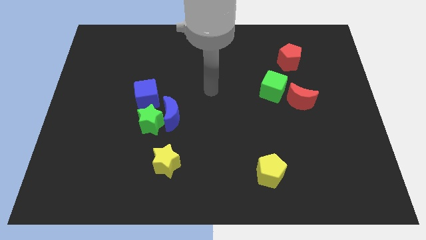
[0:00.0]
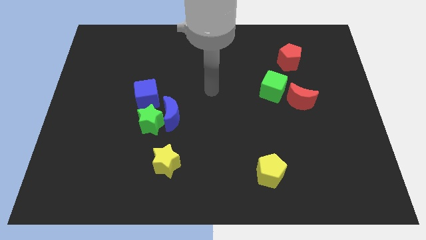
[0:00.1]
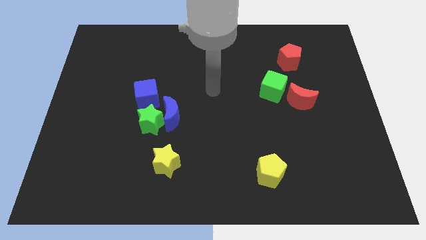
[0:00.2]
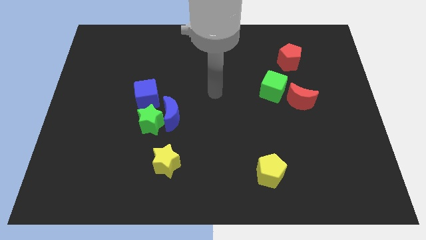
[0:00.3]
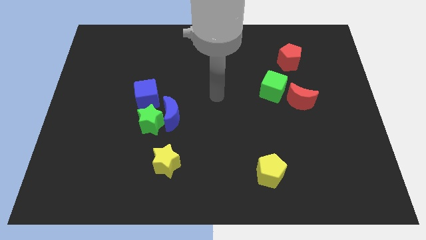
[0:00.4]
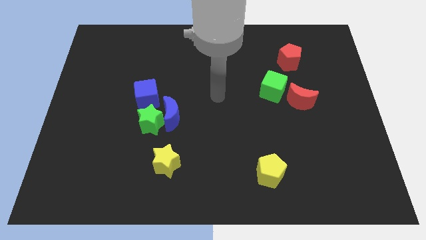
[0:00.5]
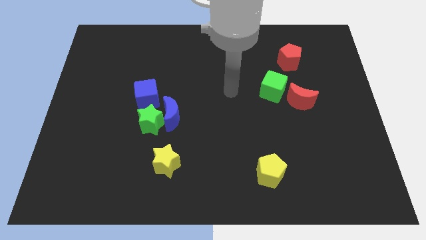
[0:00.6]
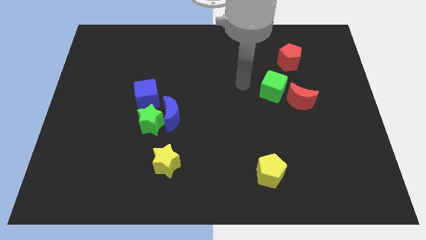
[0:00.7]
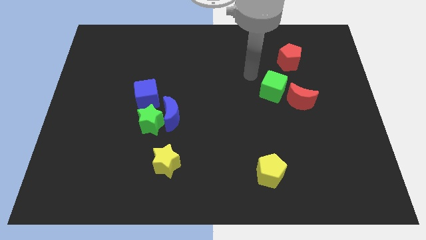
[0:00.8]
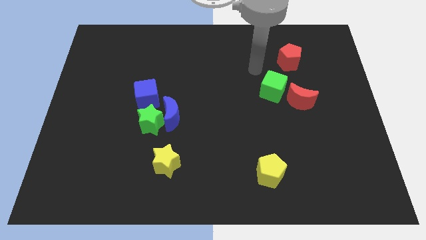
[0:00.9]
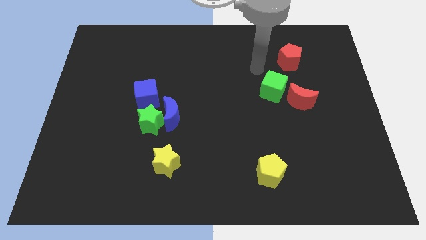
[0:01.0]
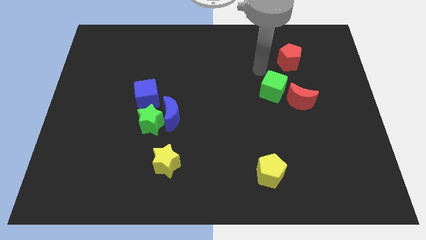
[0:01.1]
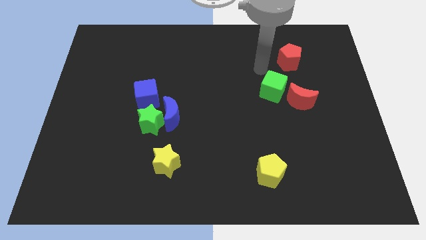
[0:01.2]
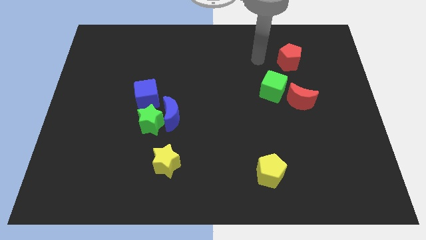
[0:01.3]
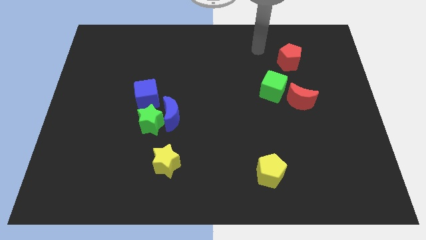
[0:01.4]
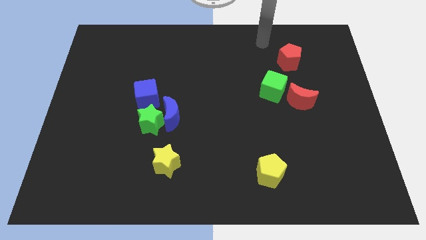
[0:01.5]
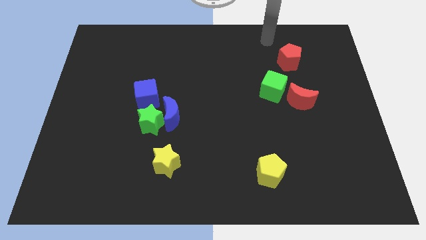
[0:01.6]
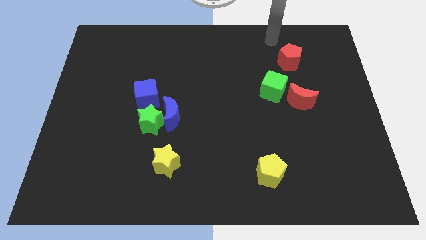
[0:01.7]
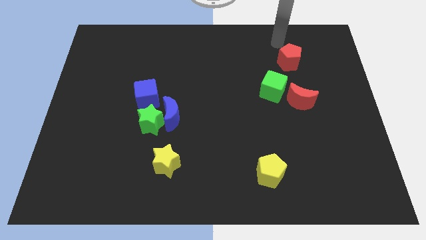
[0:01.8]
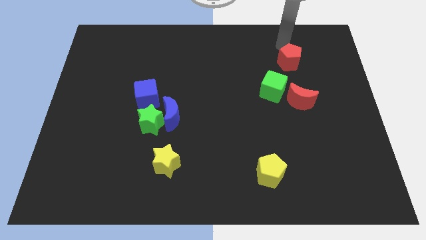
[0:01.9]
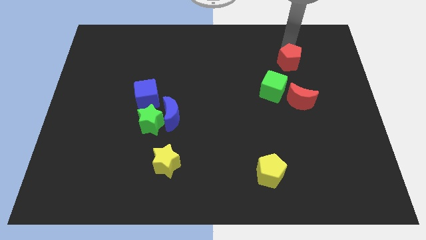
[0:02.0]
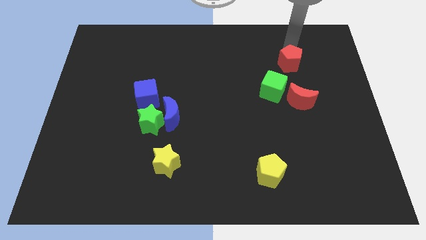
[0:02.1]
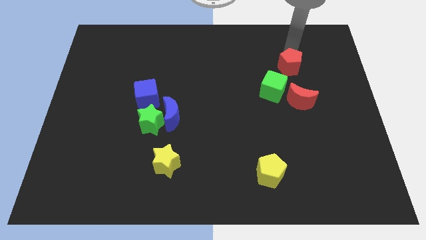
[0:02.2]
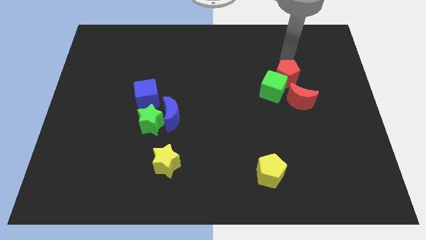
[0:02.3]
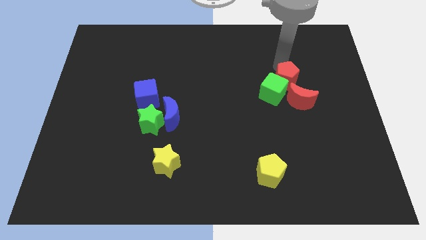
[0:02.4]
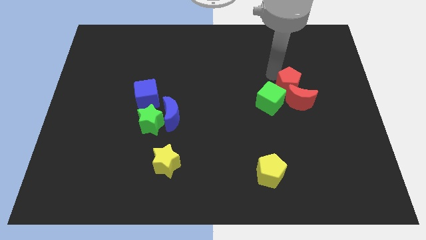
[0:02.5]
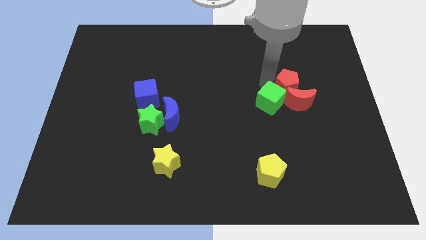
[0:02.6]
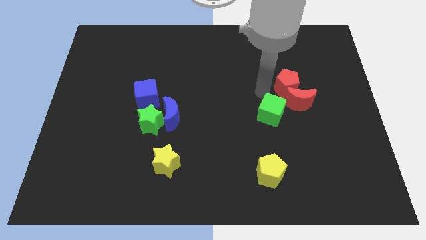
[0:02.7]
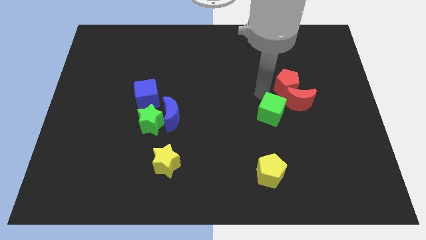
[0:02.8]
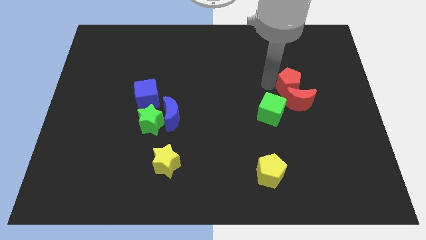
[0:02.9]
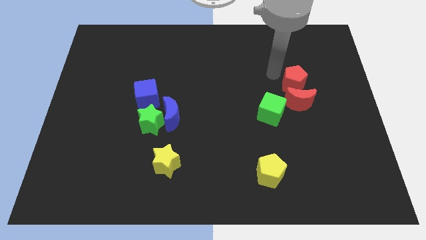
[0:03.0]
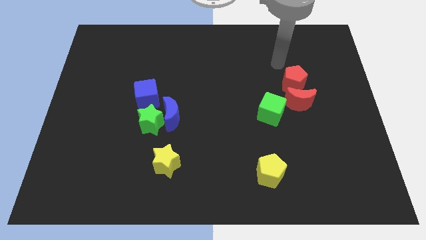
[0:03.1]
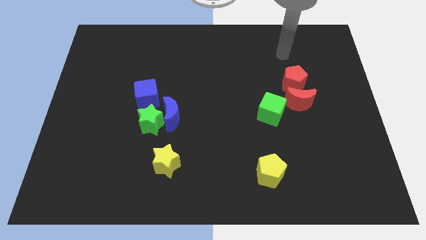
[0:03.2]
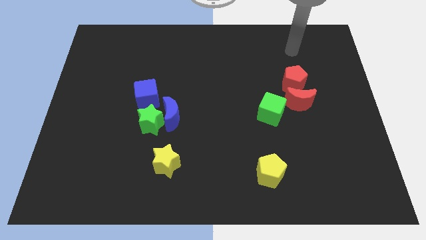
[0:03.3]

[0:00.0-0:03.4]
push the red pentagon into the green cube and red crescent

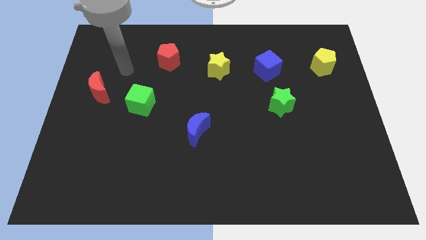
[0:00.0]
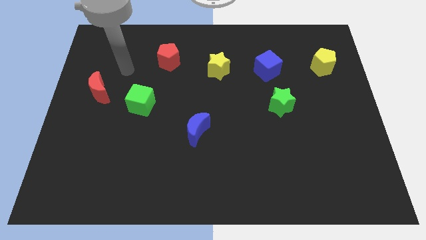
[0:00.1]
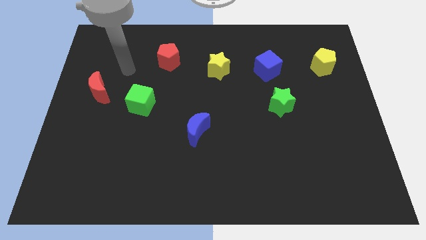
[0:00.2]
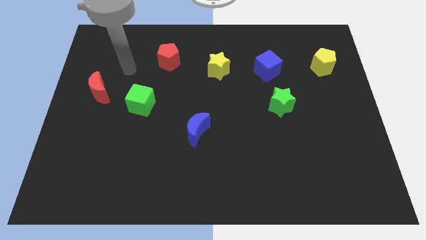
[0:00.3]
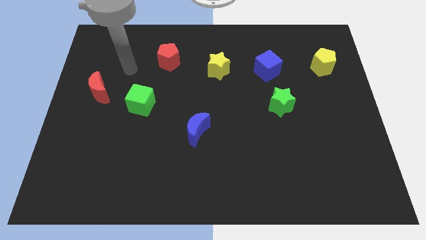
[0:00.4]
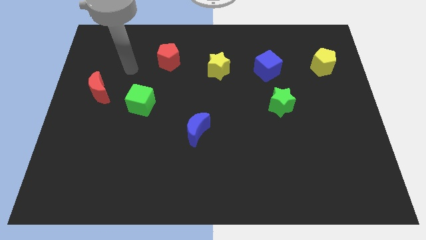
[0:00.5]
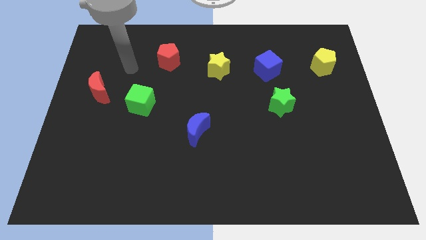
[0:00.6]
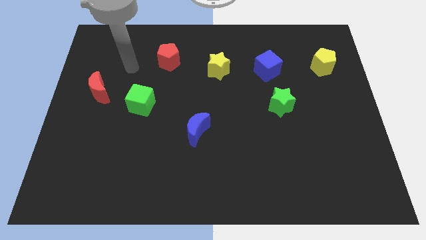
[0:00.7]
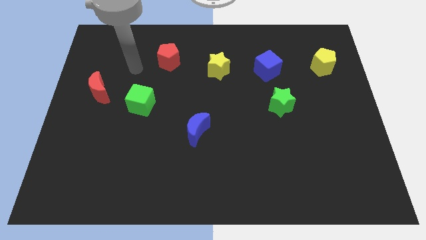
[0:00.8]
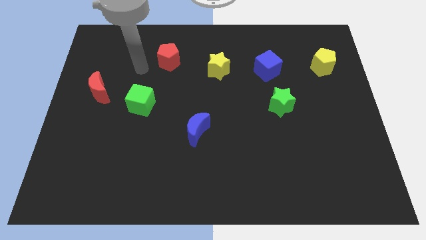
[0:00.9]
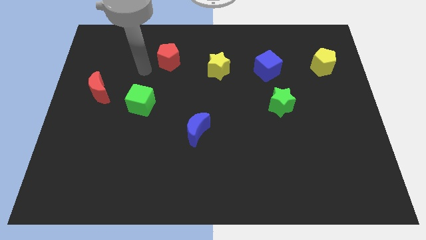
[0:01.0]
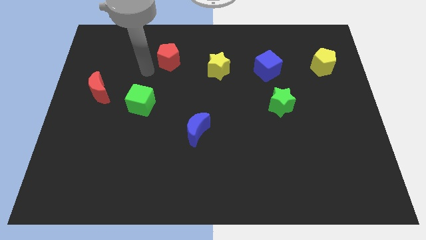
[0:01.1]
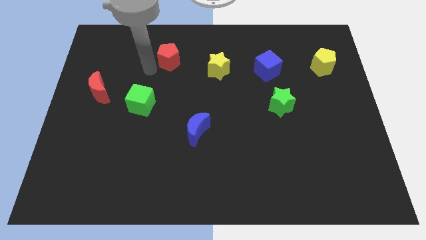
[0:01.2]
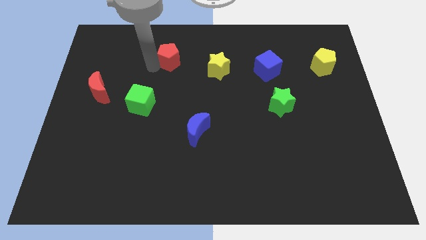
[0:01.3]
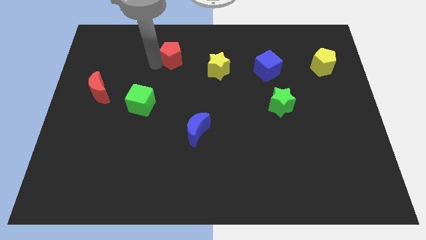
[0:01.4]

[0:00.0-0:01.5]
move your arm to the left of red pentagon

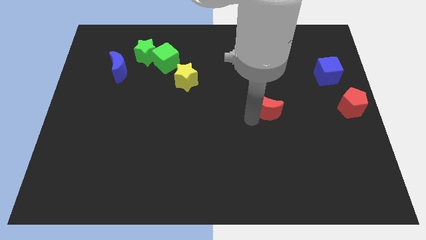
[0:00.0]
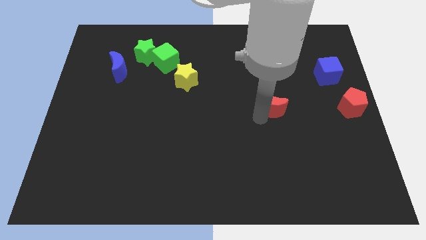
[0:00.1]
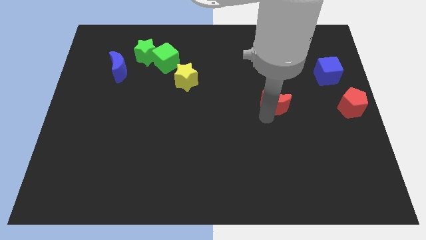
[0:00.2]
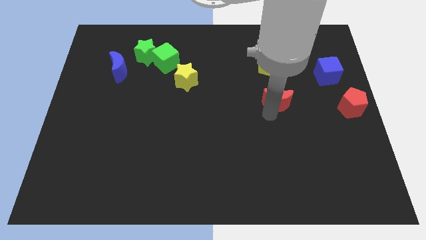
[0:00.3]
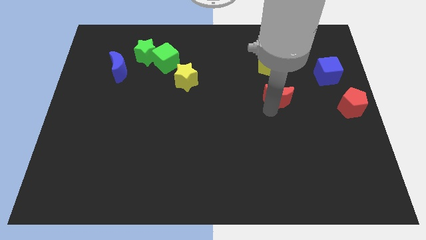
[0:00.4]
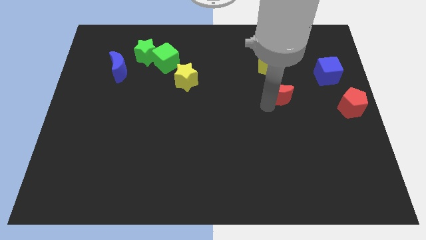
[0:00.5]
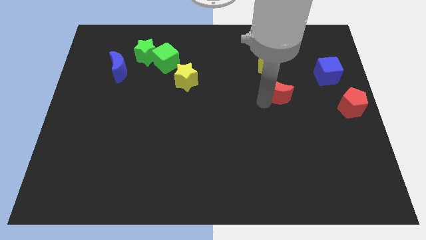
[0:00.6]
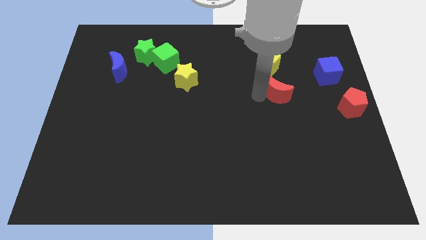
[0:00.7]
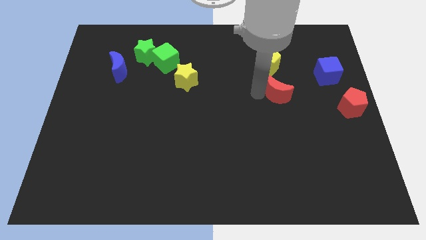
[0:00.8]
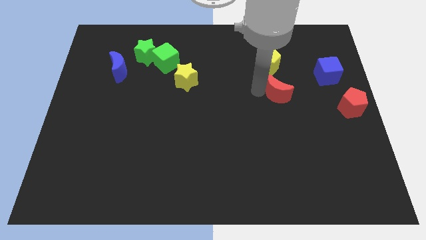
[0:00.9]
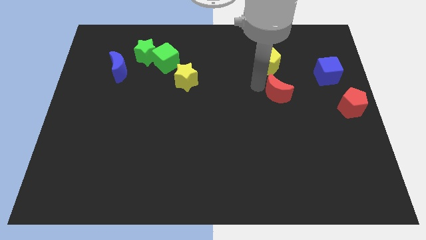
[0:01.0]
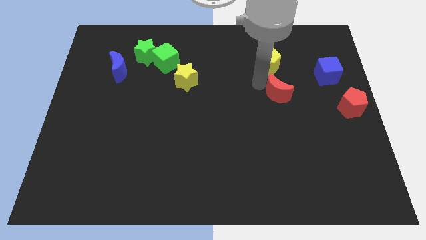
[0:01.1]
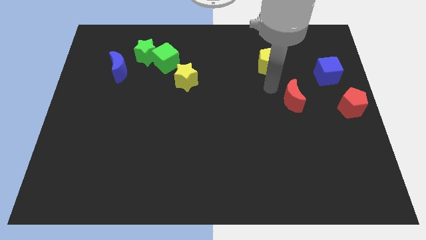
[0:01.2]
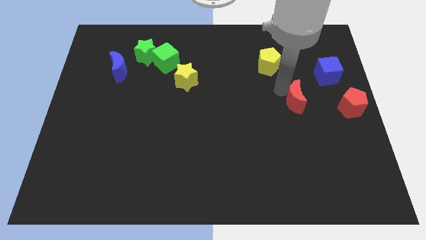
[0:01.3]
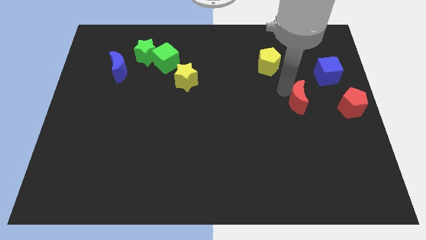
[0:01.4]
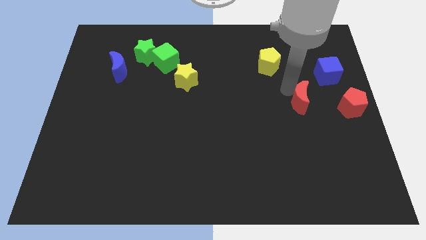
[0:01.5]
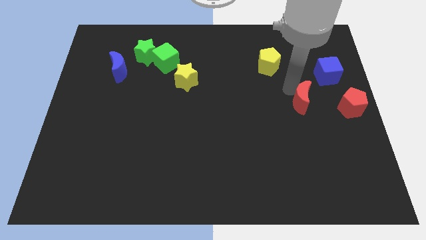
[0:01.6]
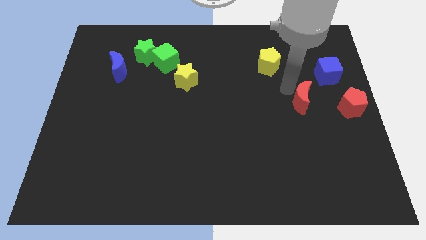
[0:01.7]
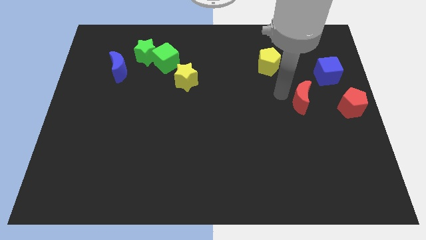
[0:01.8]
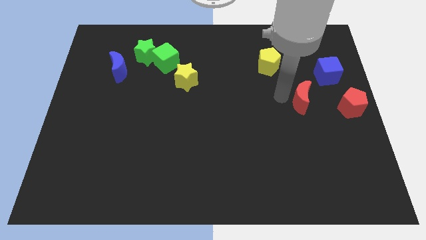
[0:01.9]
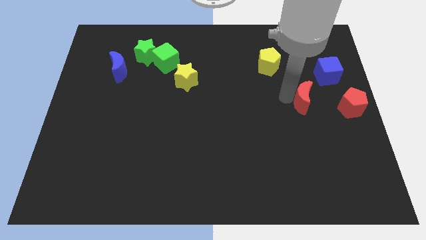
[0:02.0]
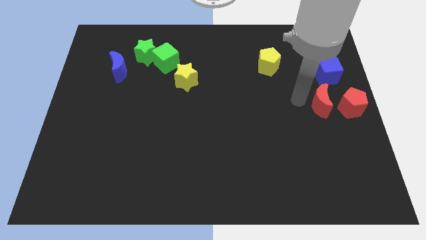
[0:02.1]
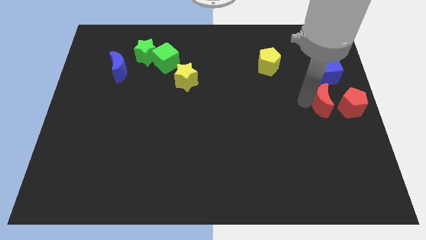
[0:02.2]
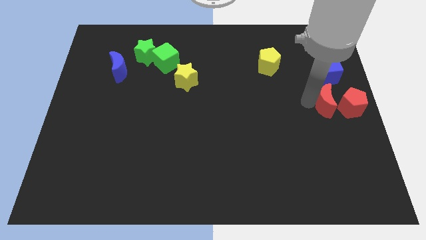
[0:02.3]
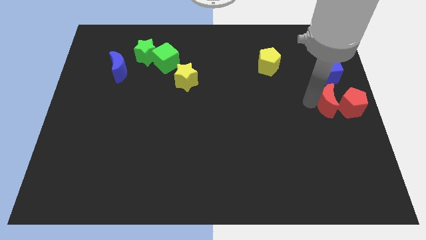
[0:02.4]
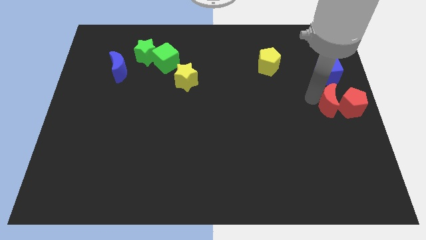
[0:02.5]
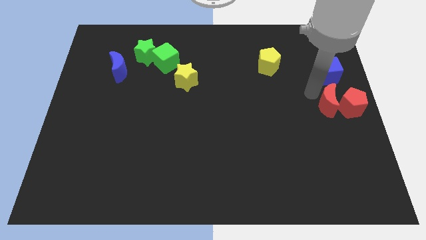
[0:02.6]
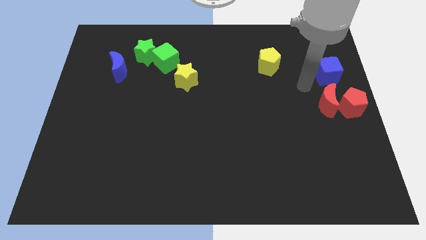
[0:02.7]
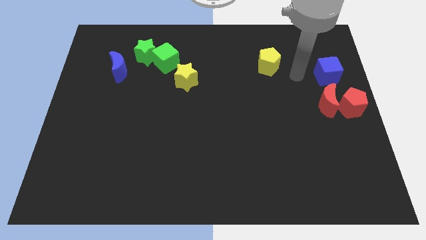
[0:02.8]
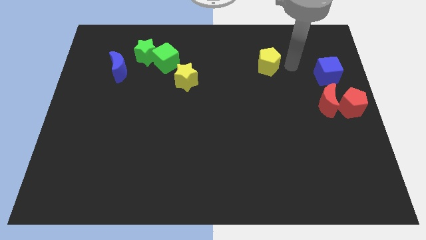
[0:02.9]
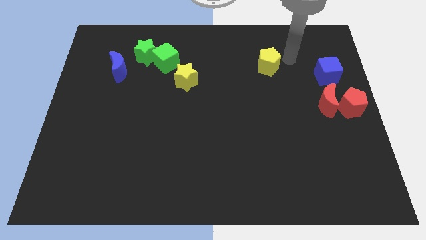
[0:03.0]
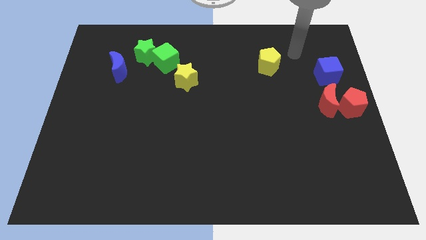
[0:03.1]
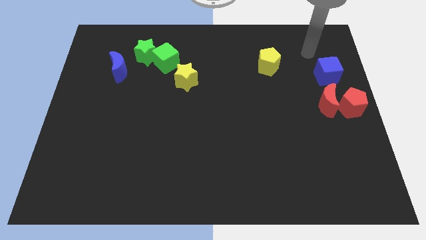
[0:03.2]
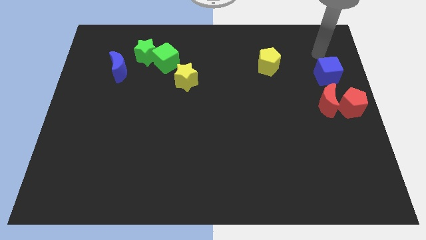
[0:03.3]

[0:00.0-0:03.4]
place the red moon down to the blue cube

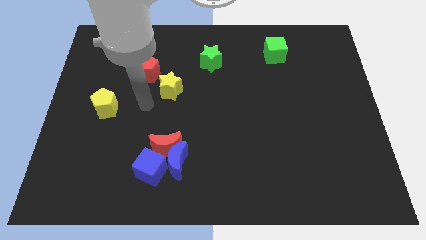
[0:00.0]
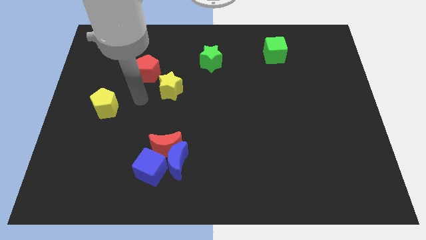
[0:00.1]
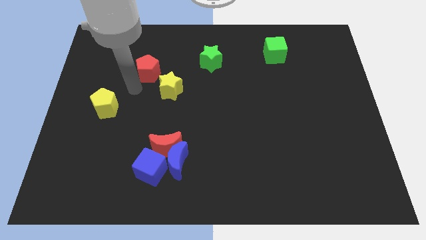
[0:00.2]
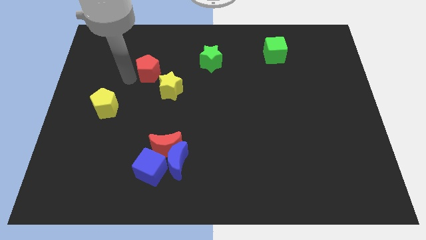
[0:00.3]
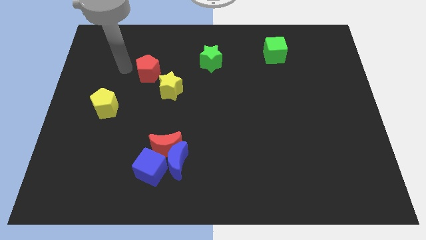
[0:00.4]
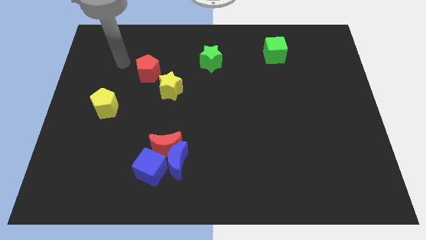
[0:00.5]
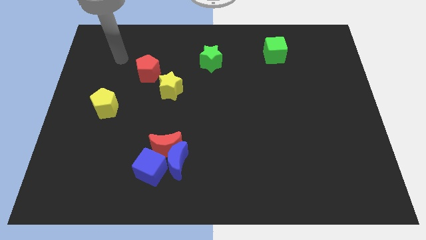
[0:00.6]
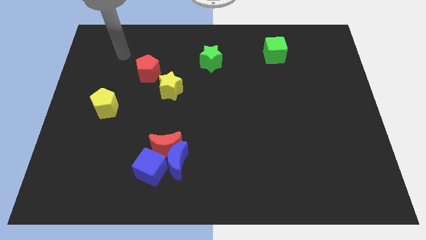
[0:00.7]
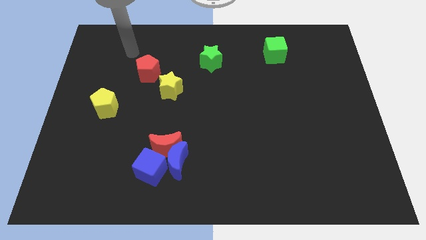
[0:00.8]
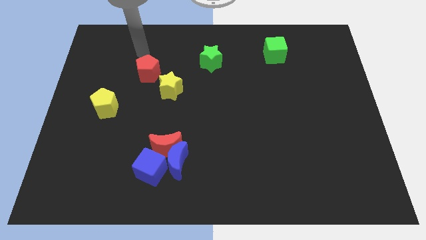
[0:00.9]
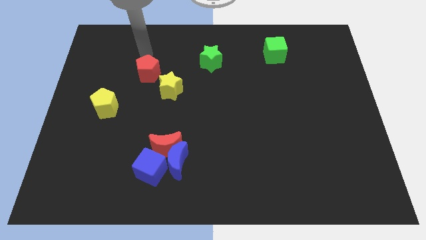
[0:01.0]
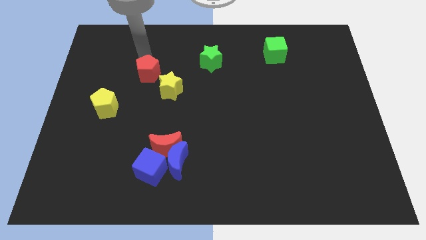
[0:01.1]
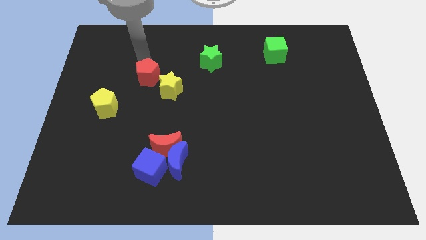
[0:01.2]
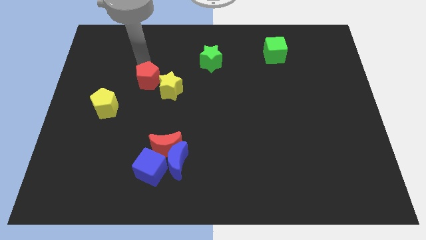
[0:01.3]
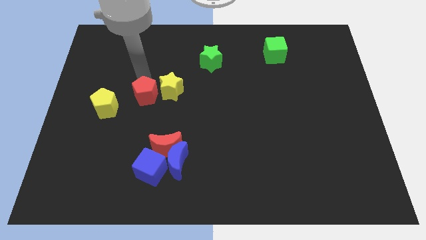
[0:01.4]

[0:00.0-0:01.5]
move the red pentagon to the left of the yellow star
